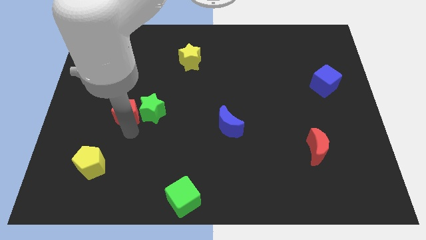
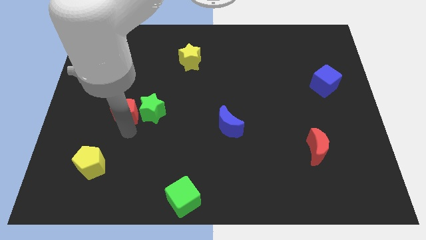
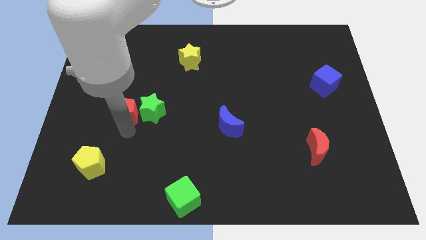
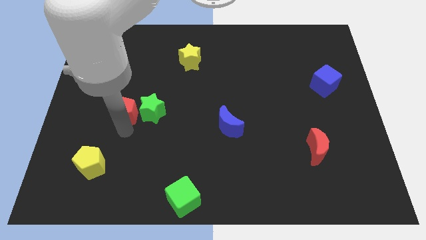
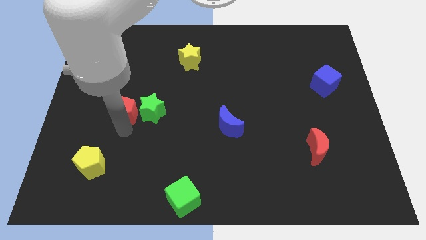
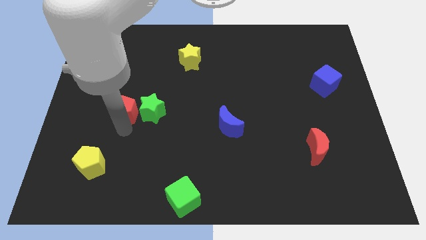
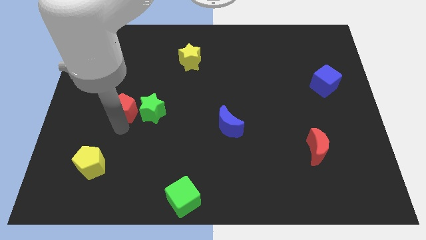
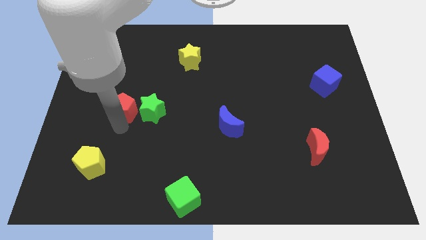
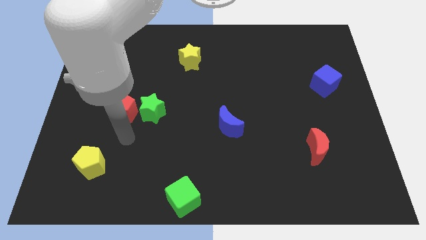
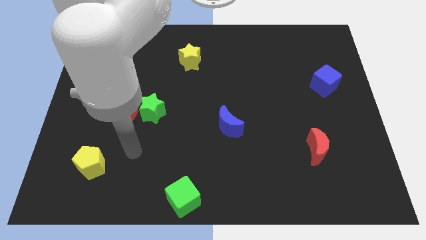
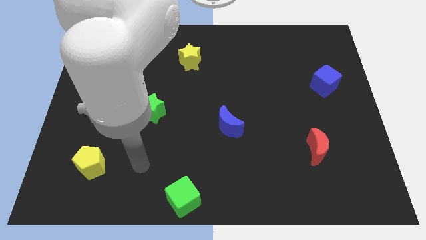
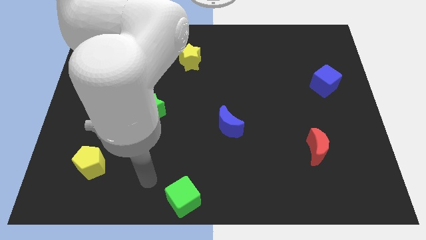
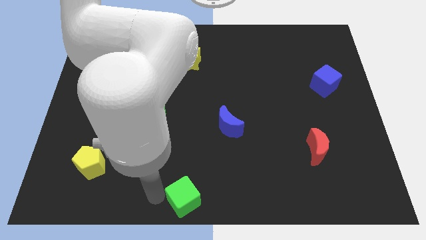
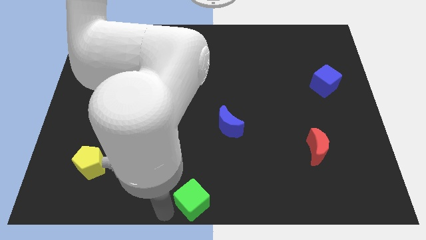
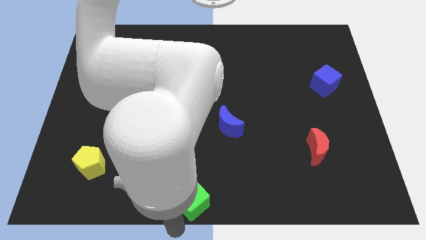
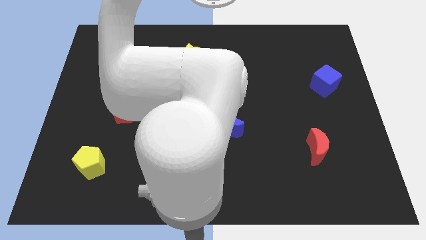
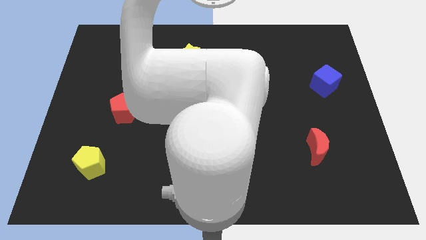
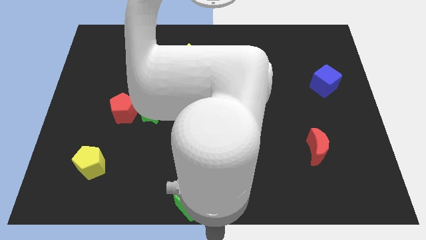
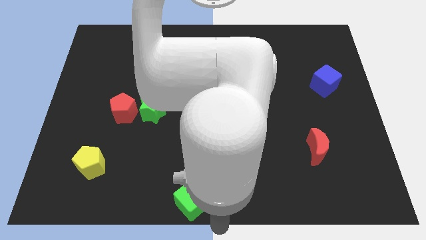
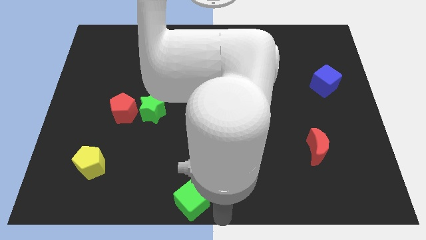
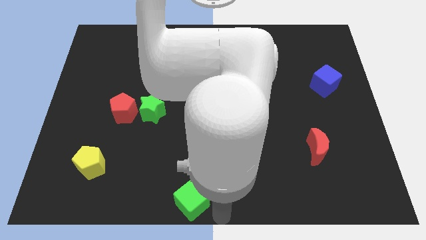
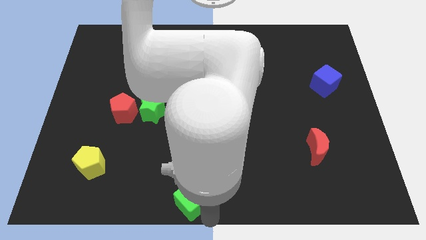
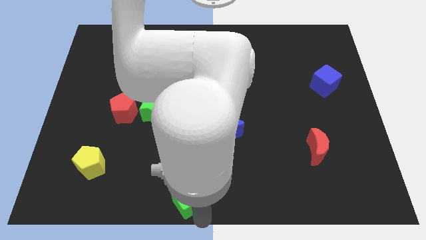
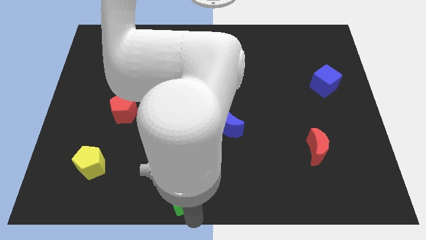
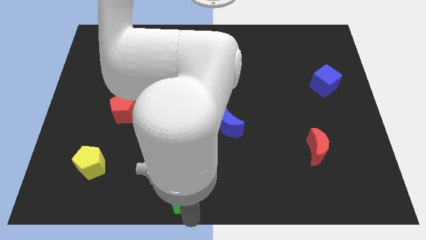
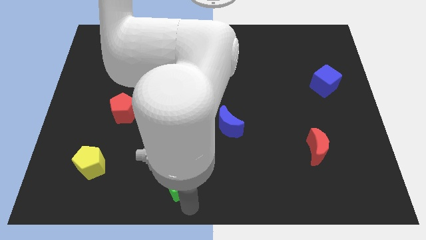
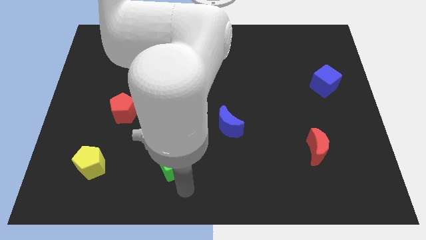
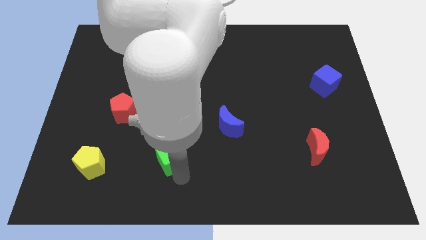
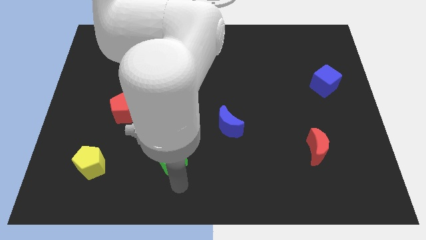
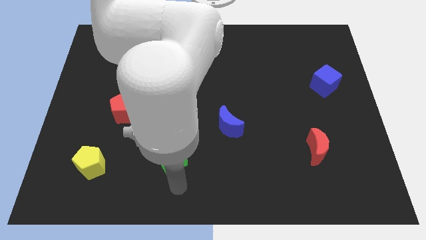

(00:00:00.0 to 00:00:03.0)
move green cube upwards

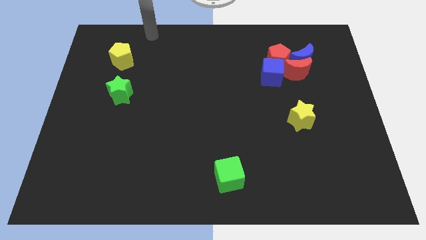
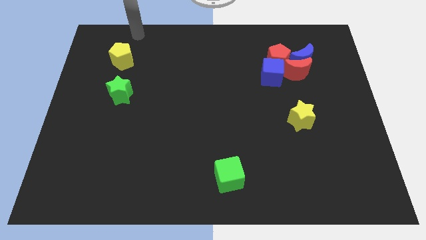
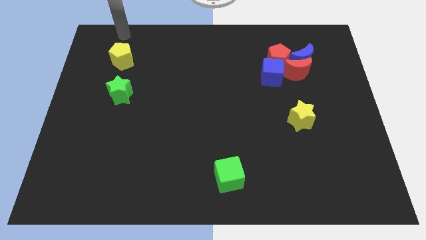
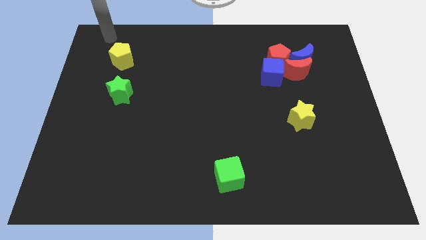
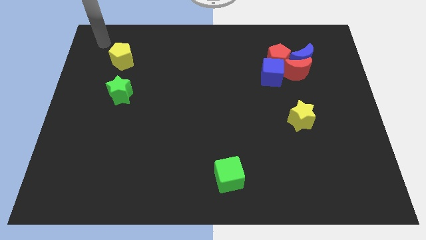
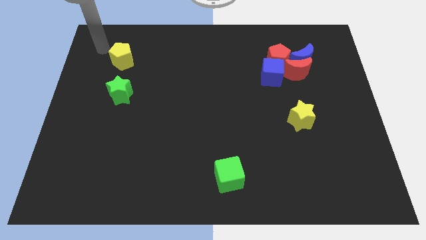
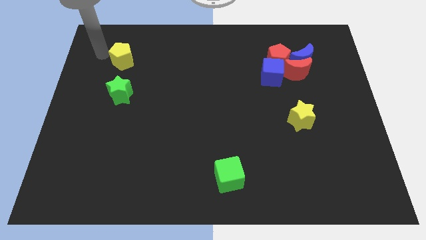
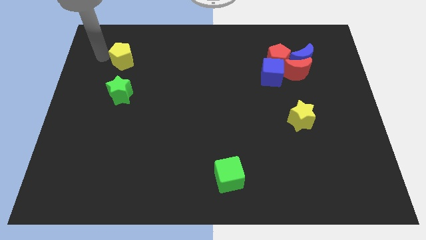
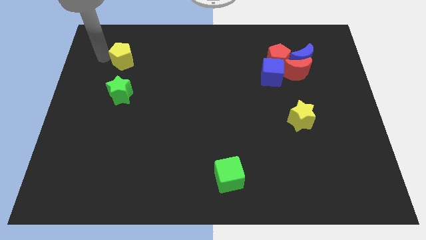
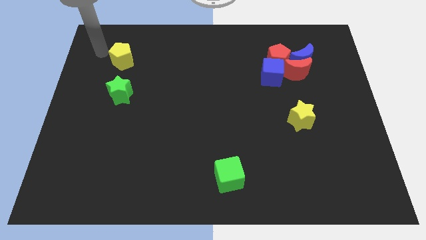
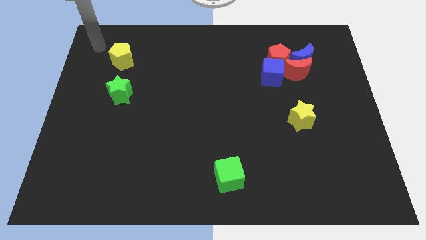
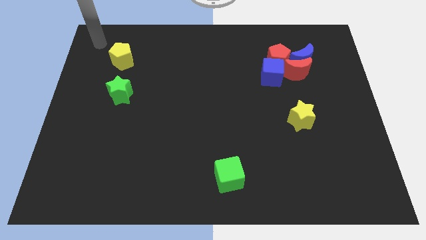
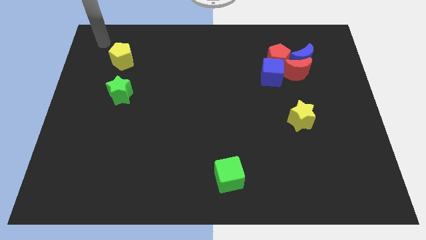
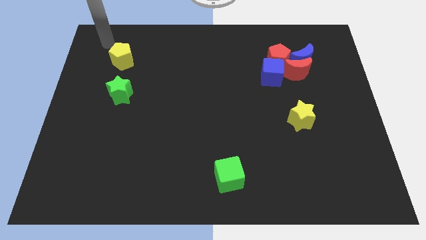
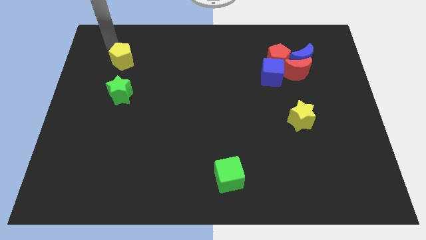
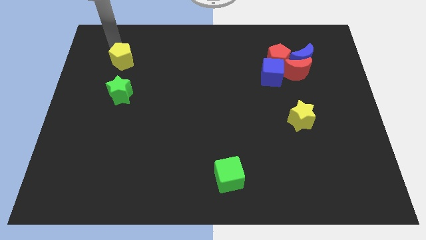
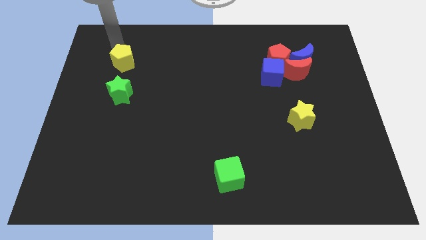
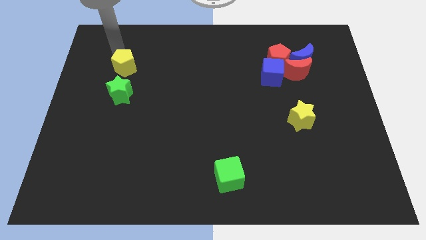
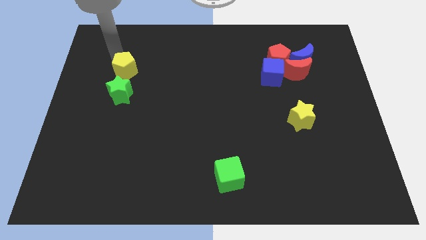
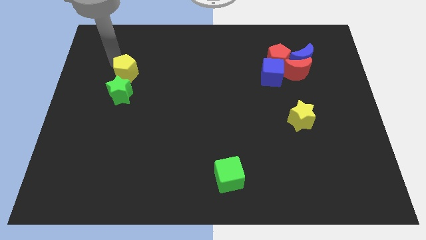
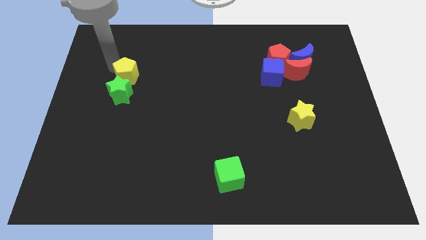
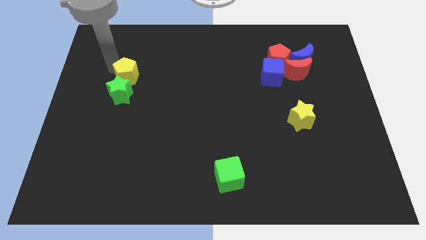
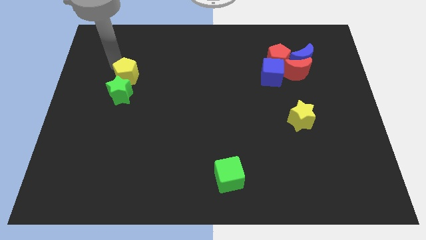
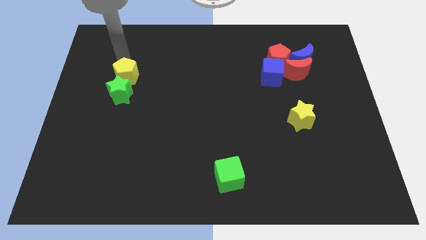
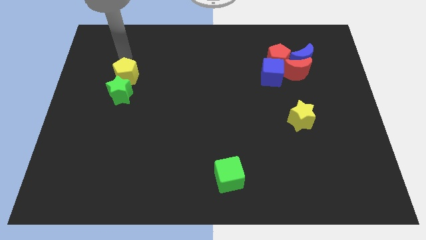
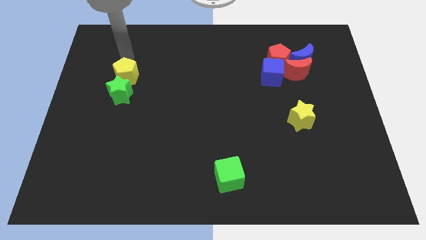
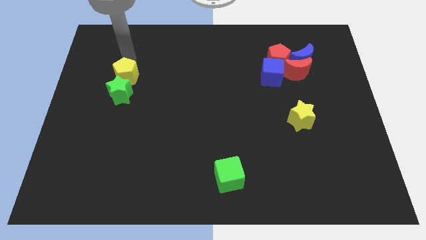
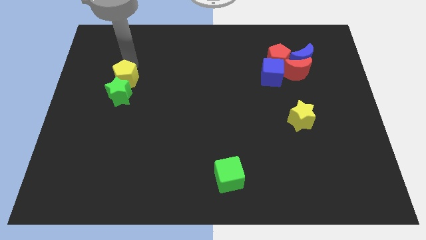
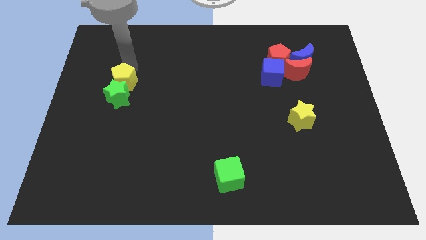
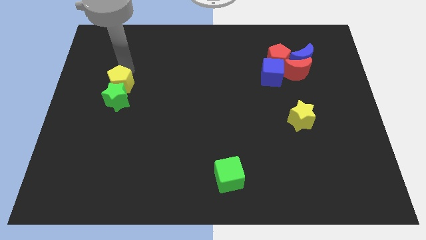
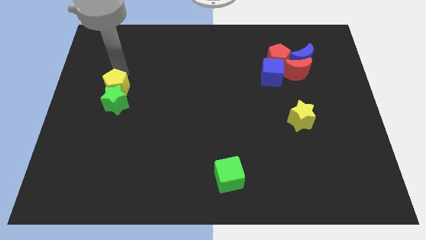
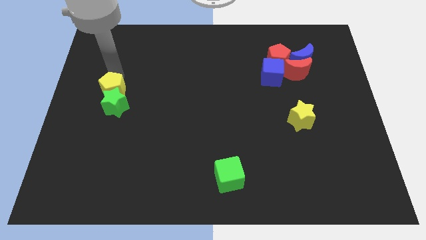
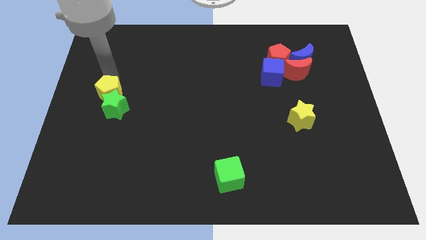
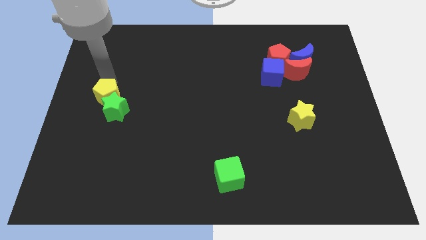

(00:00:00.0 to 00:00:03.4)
push the yellow pentagon into the green star

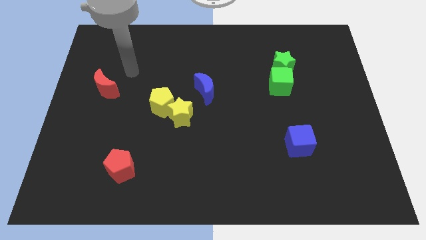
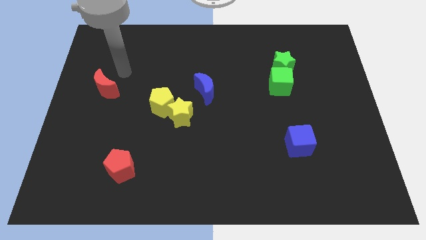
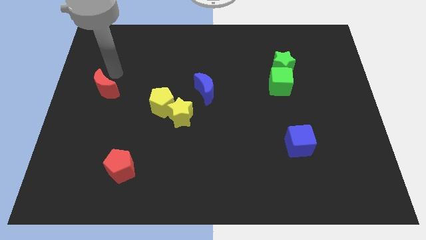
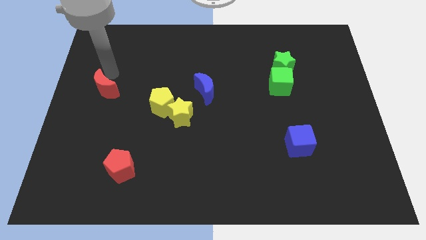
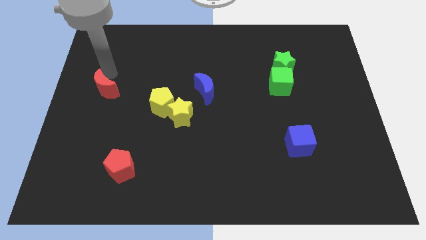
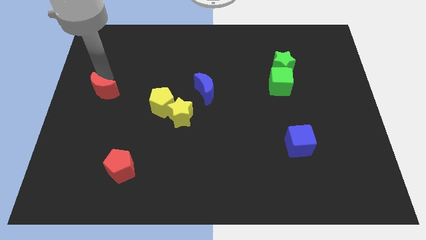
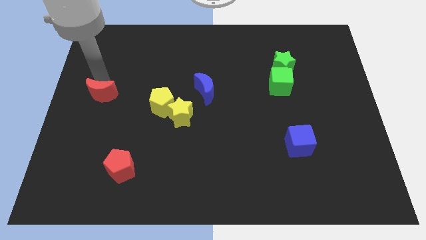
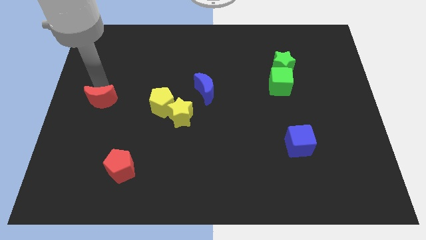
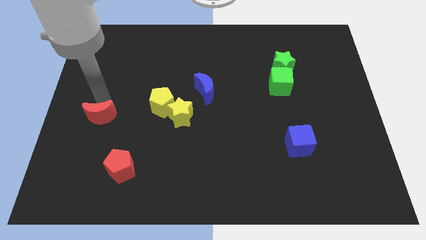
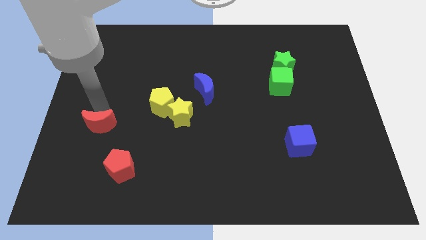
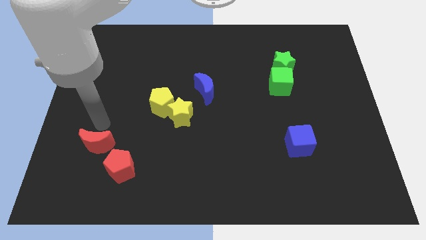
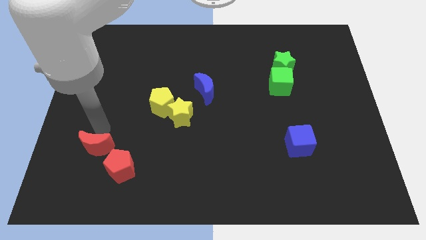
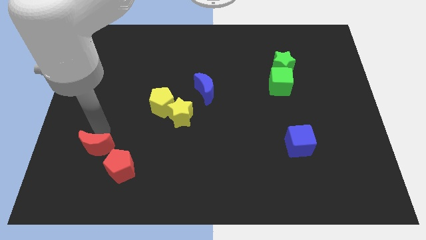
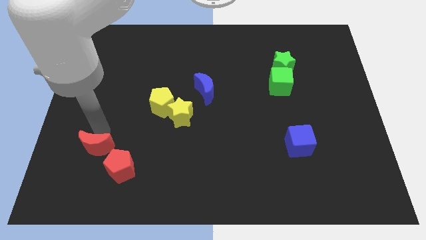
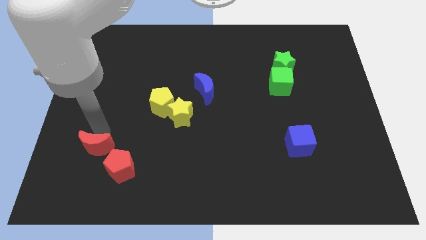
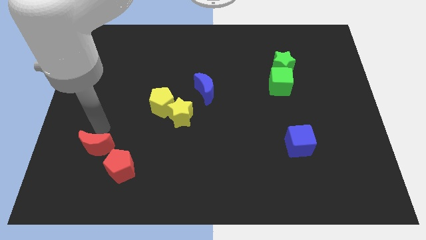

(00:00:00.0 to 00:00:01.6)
push the red crescent close to the red pentagon

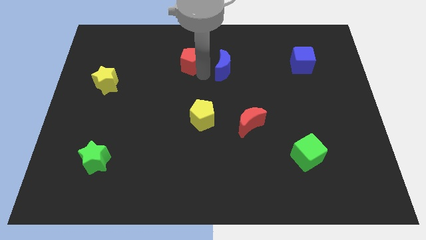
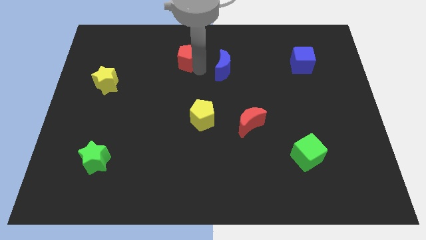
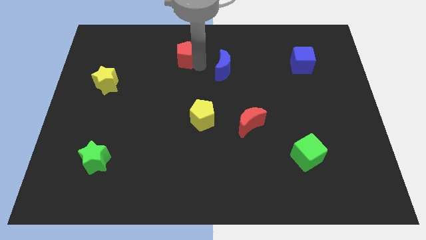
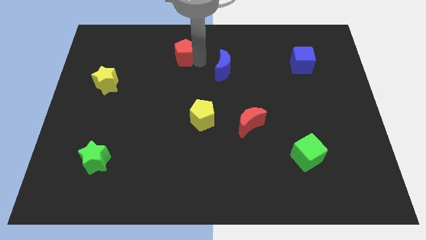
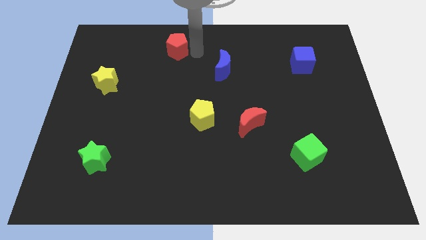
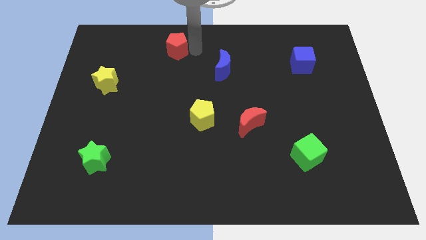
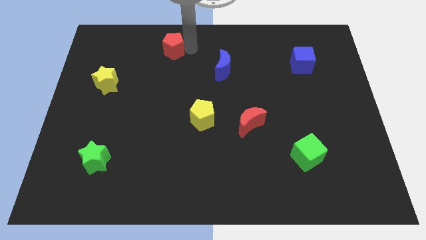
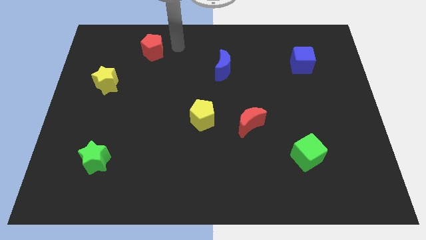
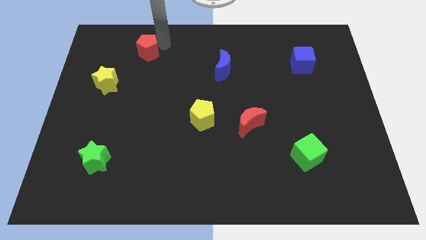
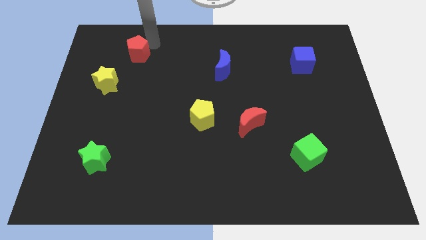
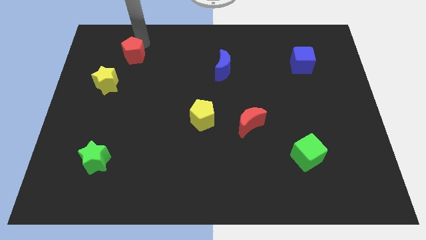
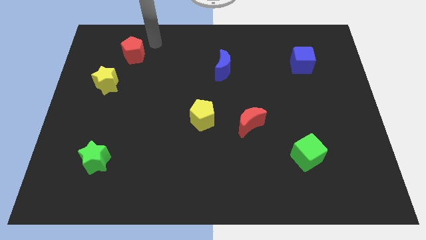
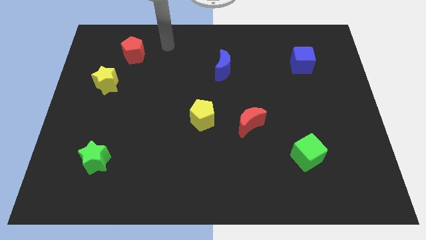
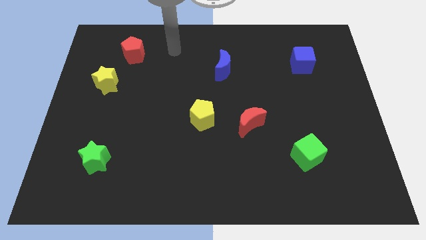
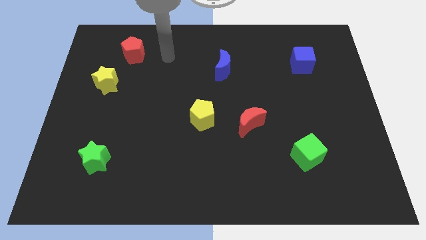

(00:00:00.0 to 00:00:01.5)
place the red pentagon diagonally to the yellow star
